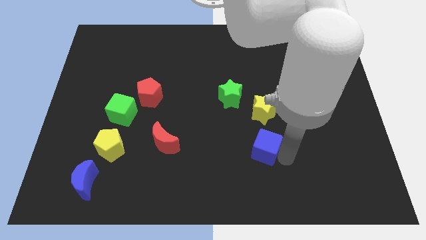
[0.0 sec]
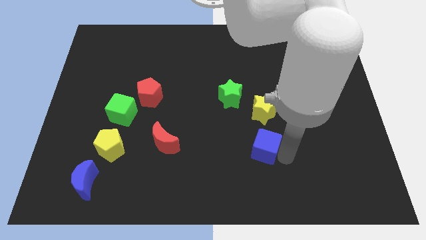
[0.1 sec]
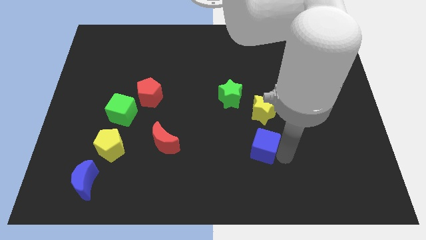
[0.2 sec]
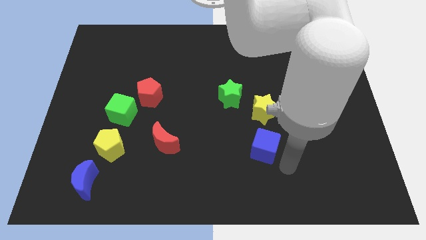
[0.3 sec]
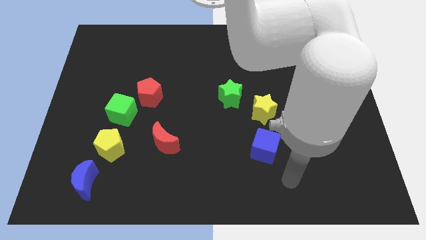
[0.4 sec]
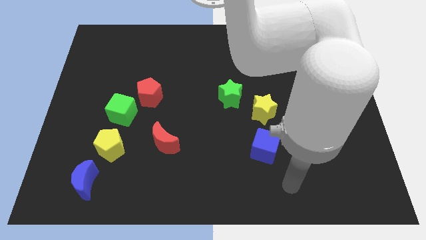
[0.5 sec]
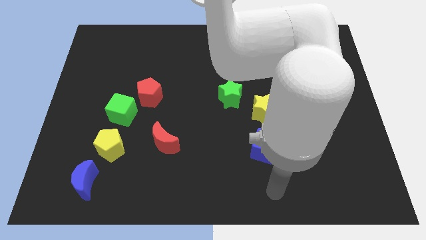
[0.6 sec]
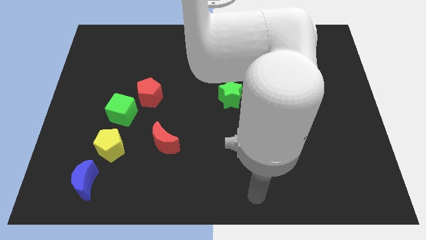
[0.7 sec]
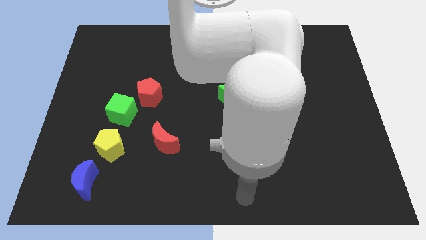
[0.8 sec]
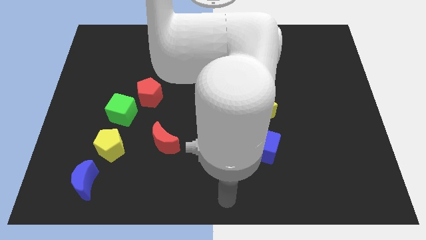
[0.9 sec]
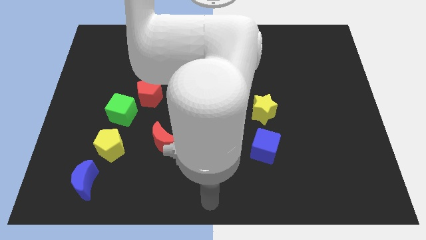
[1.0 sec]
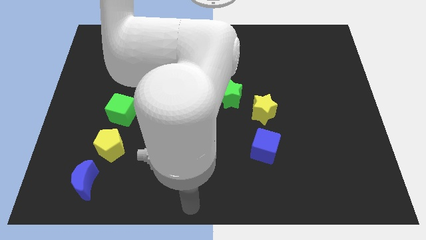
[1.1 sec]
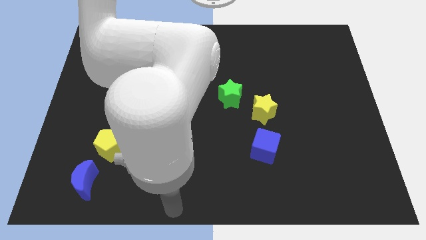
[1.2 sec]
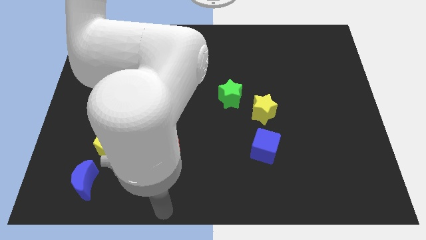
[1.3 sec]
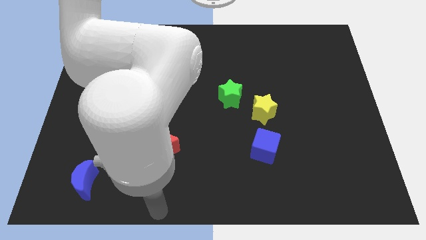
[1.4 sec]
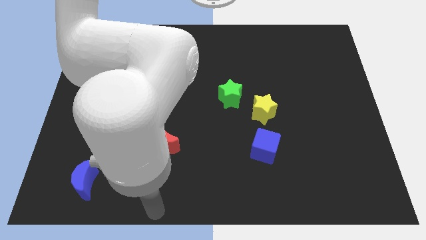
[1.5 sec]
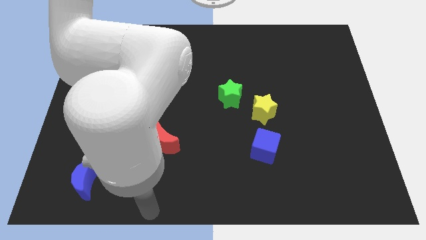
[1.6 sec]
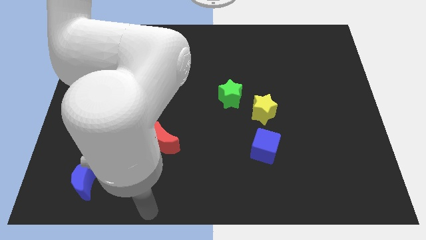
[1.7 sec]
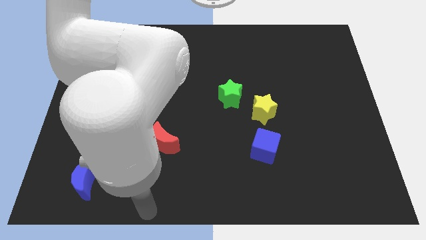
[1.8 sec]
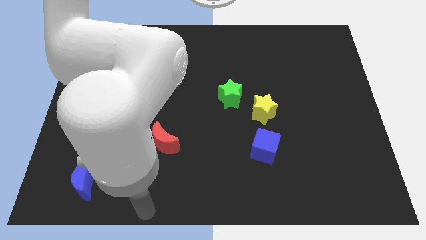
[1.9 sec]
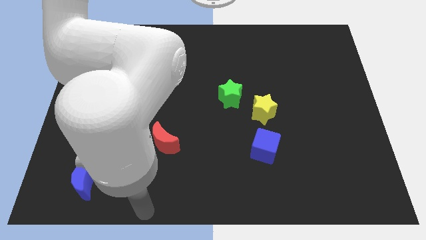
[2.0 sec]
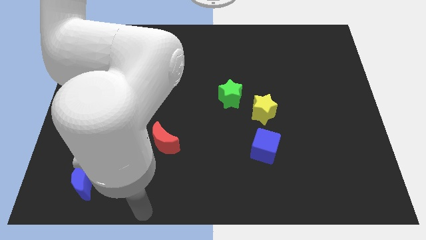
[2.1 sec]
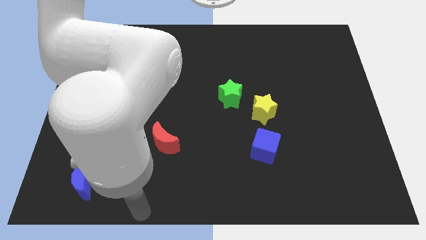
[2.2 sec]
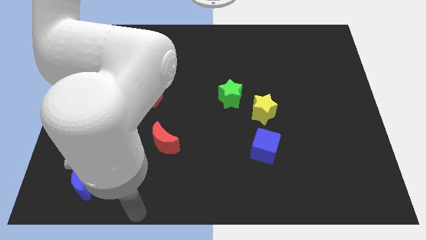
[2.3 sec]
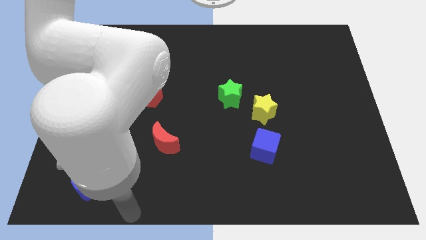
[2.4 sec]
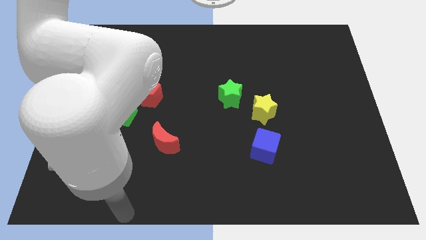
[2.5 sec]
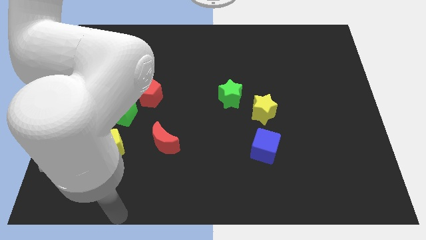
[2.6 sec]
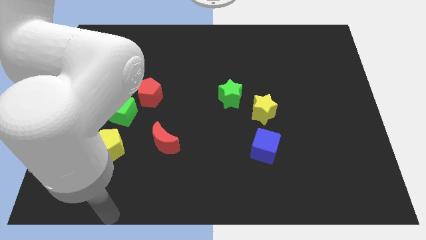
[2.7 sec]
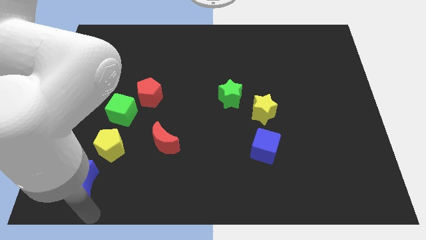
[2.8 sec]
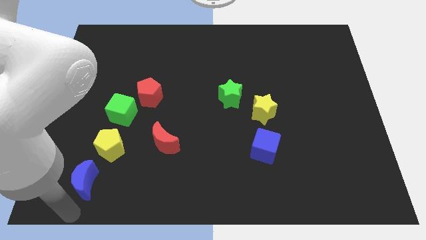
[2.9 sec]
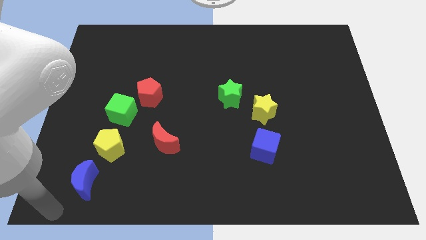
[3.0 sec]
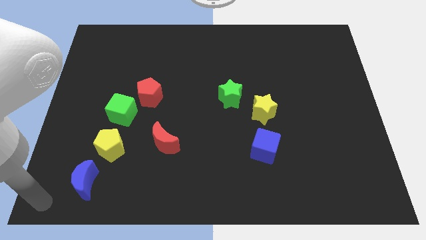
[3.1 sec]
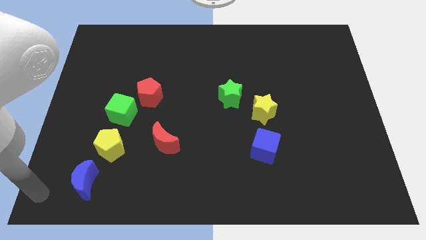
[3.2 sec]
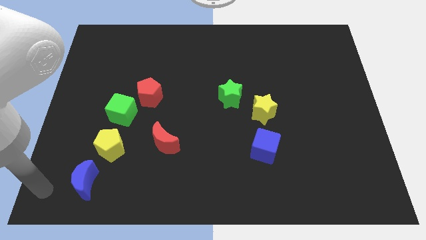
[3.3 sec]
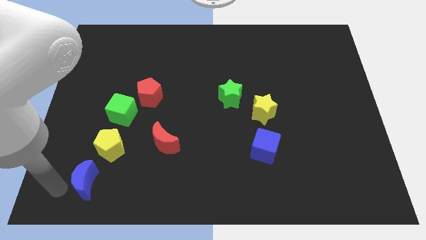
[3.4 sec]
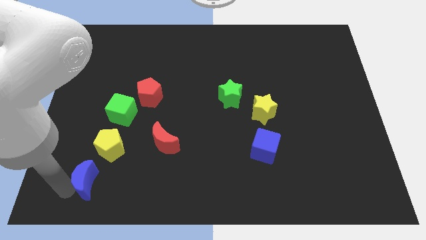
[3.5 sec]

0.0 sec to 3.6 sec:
place your arm to the left of blue crescent

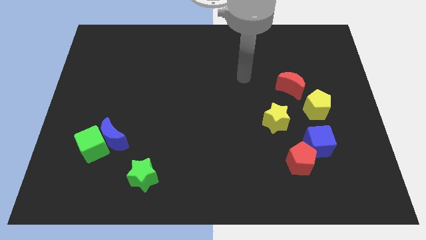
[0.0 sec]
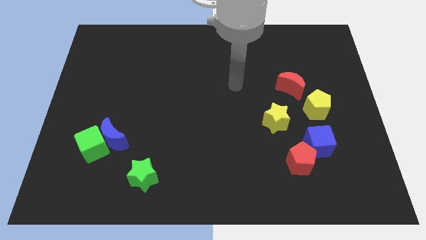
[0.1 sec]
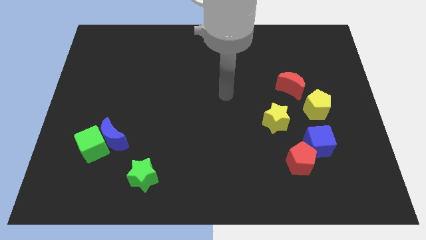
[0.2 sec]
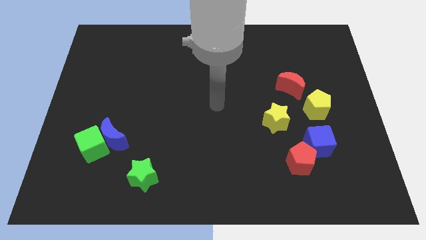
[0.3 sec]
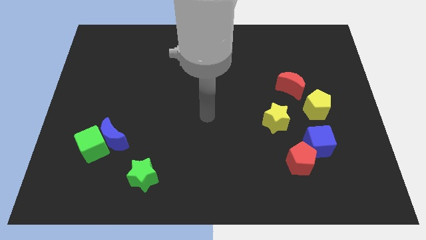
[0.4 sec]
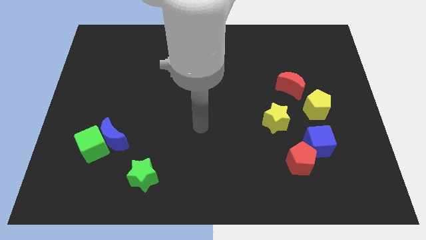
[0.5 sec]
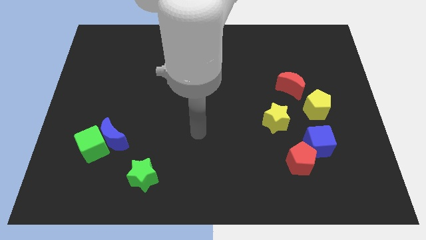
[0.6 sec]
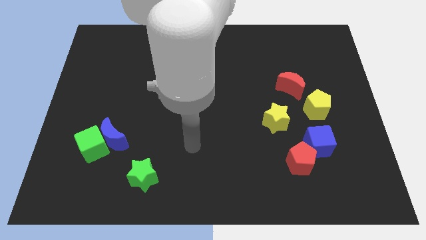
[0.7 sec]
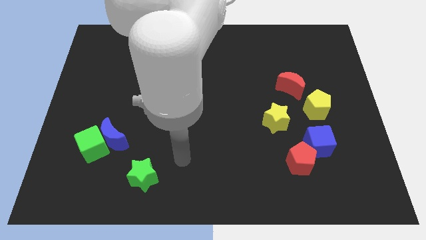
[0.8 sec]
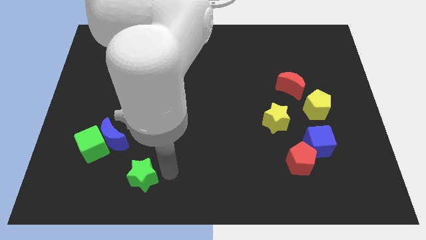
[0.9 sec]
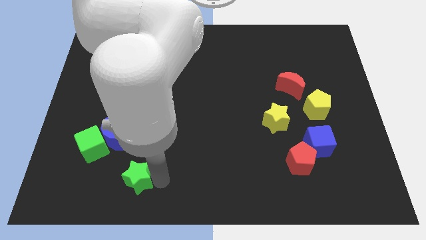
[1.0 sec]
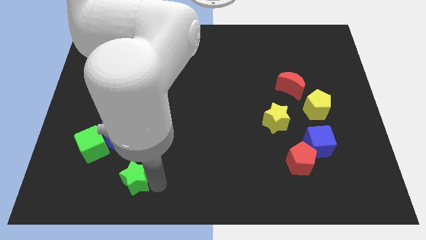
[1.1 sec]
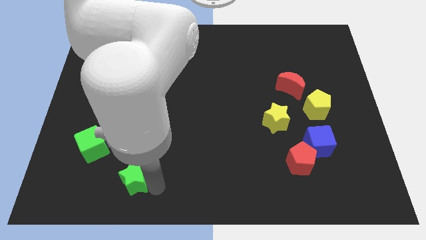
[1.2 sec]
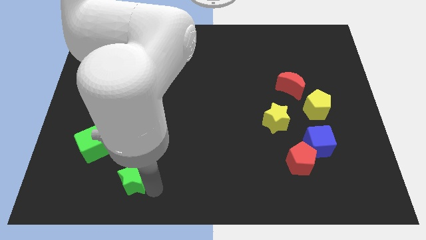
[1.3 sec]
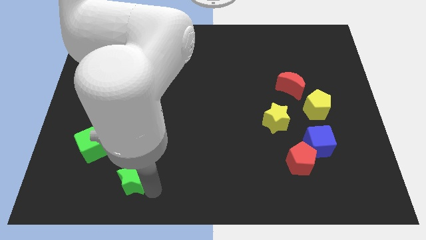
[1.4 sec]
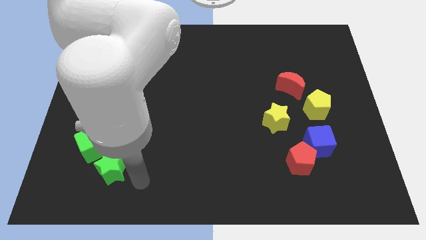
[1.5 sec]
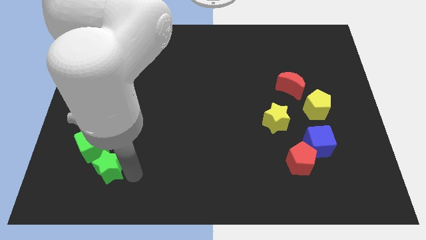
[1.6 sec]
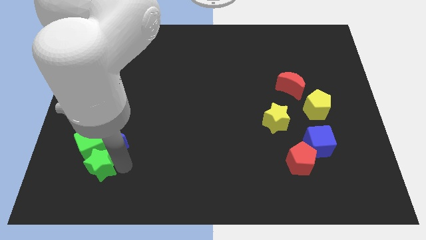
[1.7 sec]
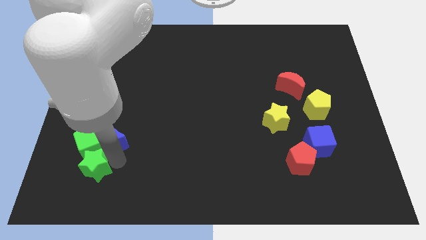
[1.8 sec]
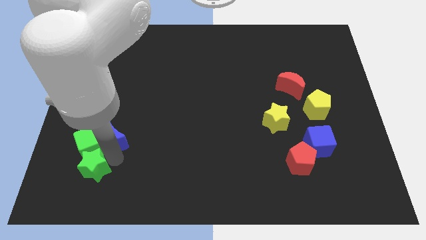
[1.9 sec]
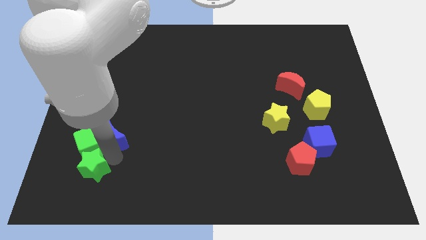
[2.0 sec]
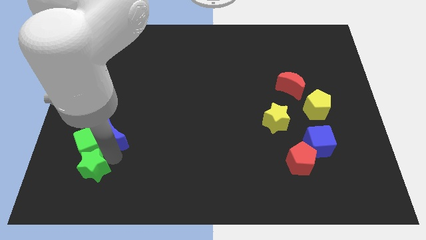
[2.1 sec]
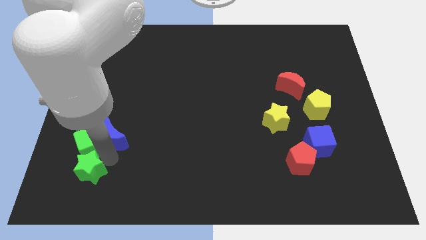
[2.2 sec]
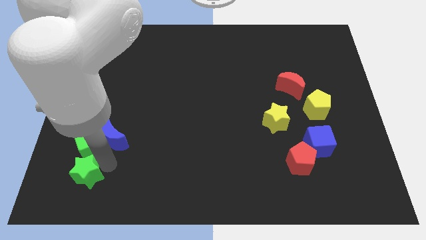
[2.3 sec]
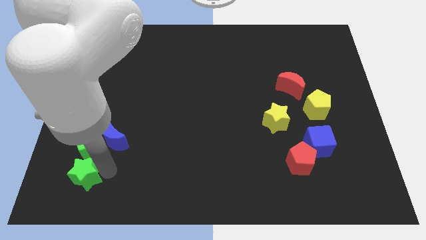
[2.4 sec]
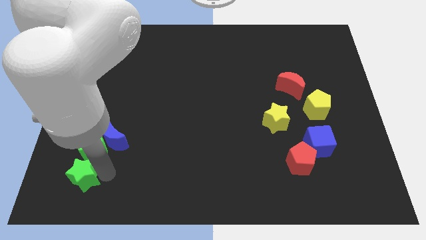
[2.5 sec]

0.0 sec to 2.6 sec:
move the green star to the bottom of green cube

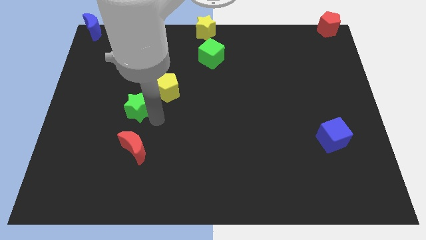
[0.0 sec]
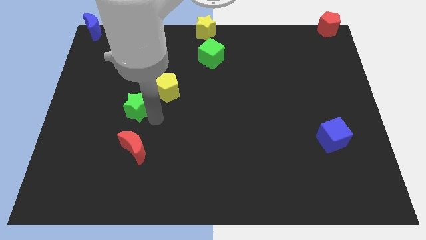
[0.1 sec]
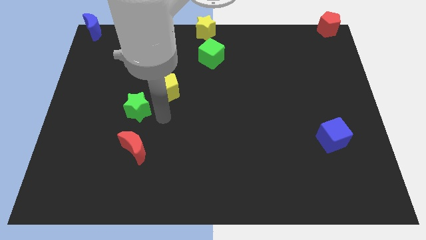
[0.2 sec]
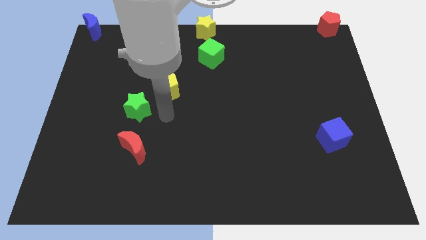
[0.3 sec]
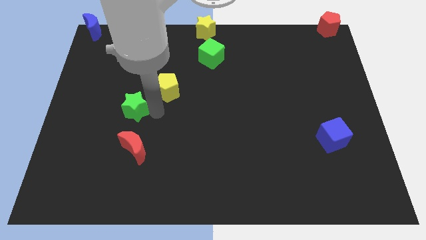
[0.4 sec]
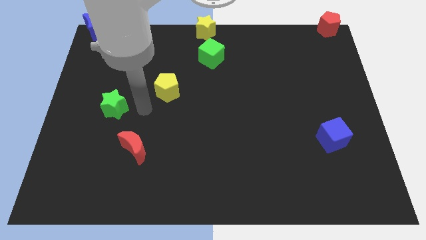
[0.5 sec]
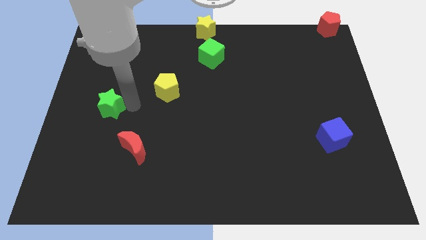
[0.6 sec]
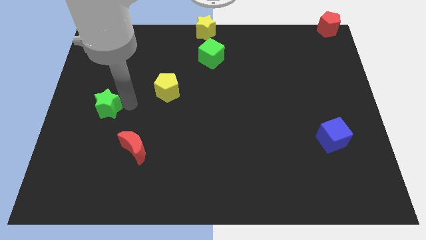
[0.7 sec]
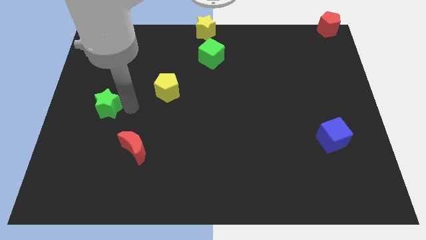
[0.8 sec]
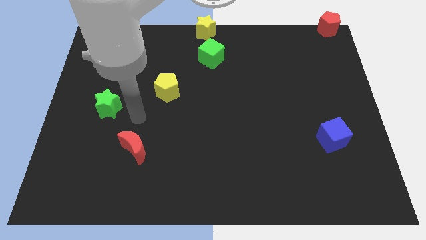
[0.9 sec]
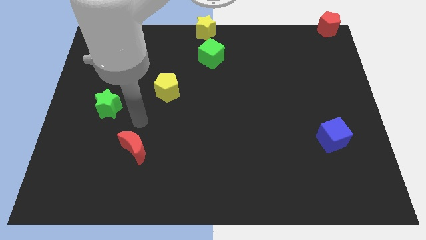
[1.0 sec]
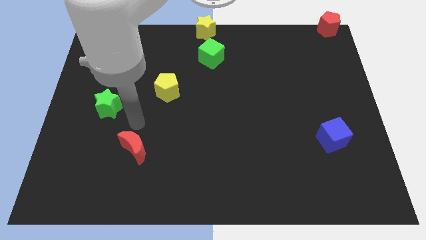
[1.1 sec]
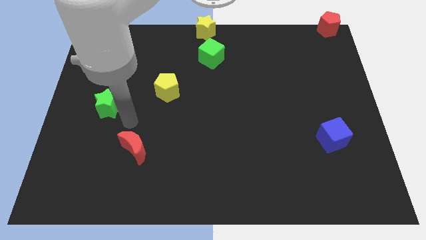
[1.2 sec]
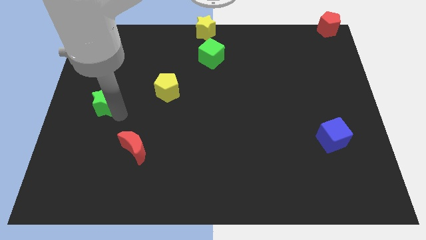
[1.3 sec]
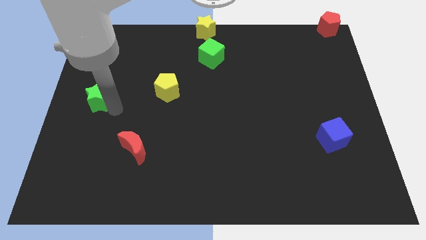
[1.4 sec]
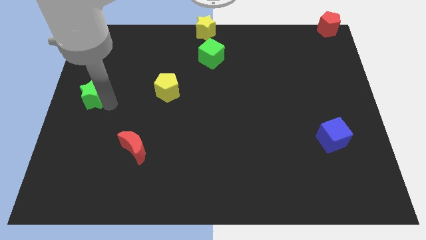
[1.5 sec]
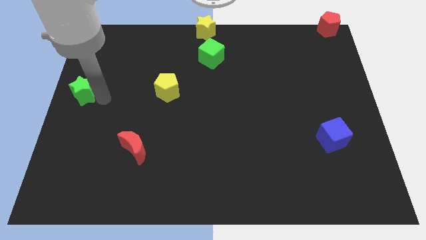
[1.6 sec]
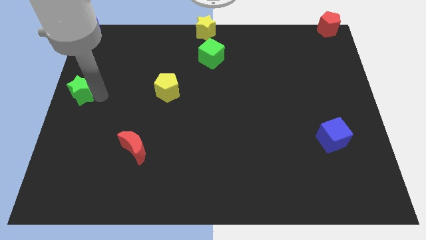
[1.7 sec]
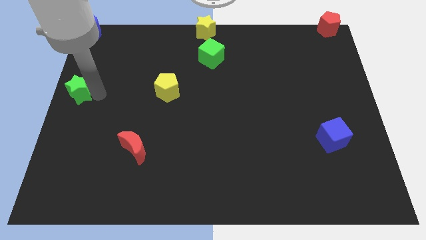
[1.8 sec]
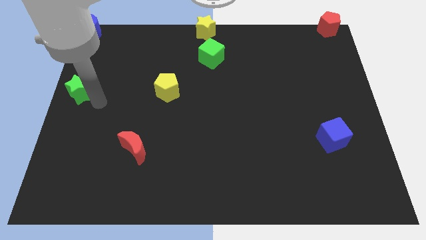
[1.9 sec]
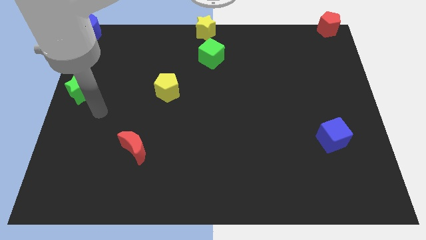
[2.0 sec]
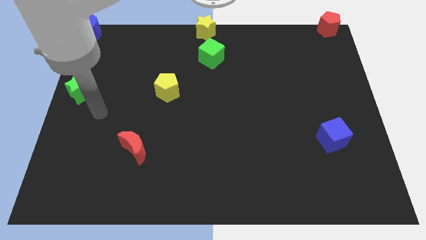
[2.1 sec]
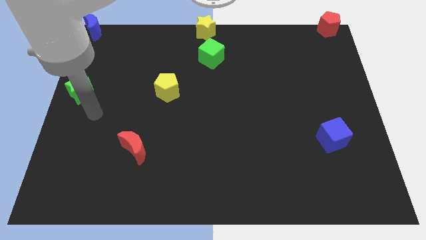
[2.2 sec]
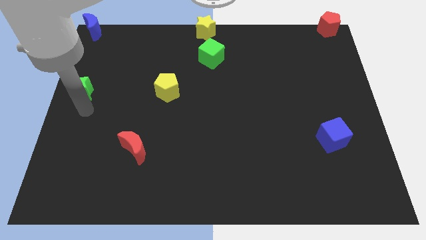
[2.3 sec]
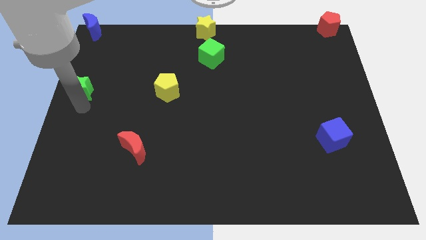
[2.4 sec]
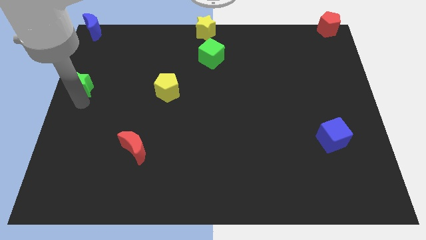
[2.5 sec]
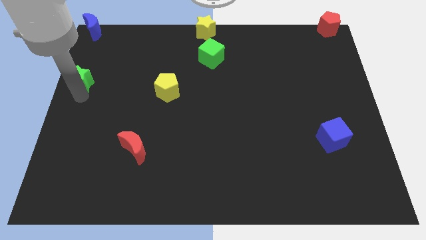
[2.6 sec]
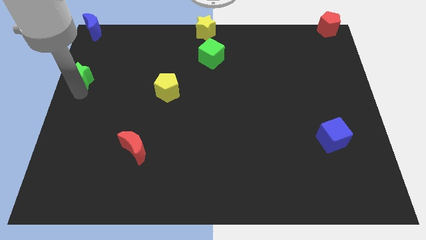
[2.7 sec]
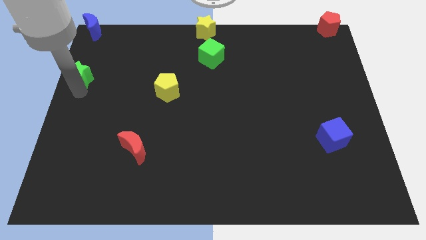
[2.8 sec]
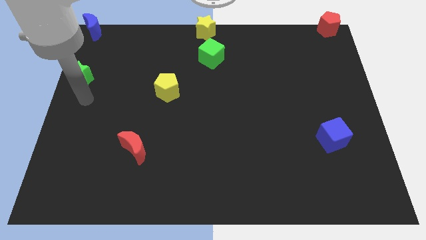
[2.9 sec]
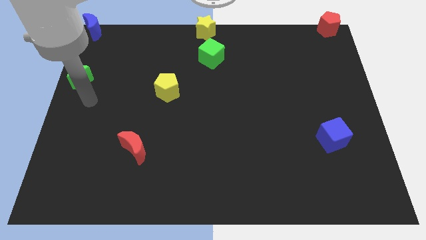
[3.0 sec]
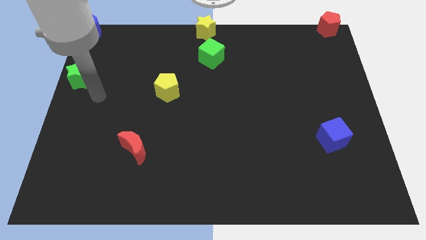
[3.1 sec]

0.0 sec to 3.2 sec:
place the green star at the left center of the board
